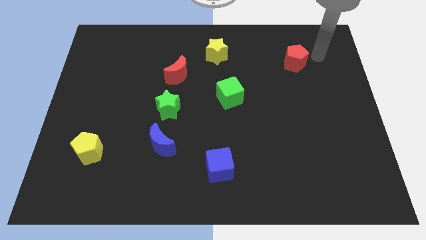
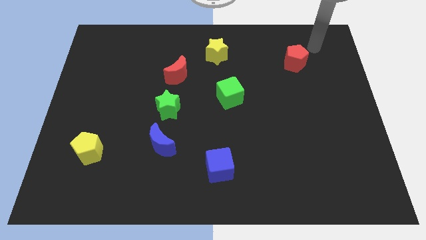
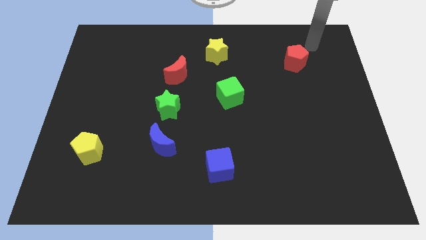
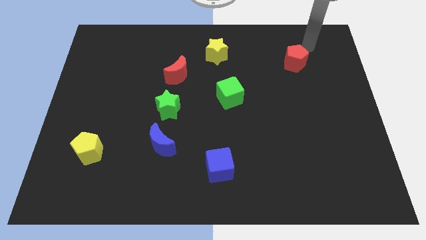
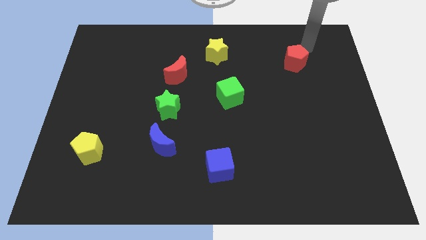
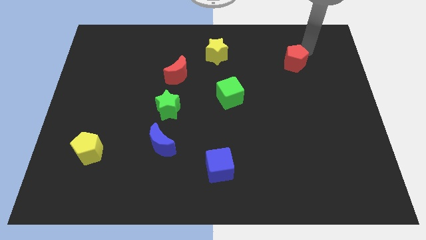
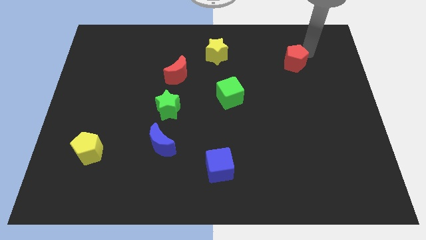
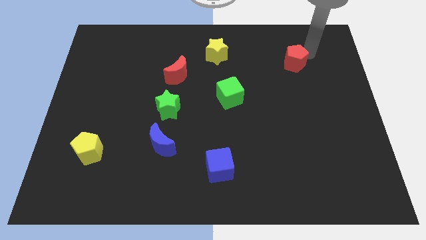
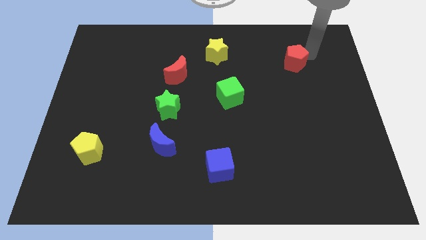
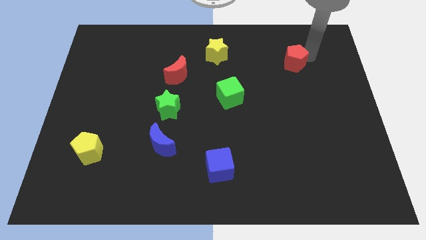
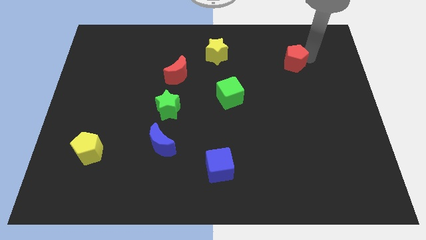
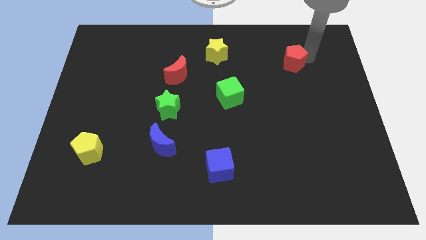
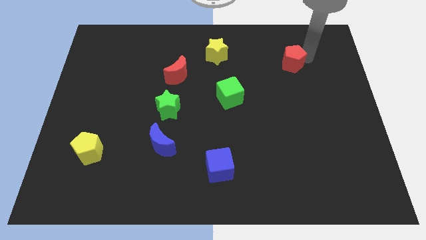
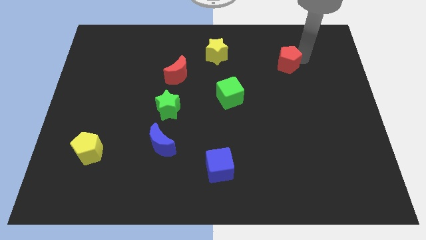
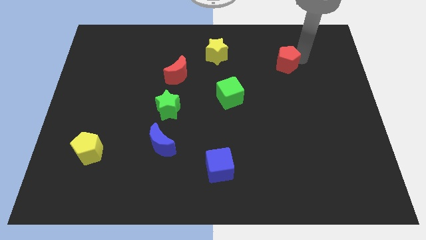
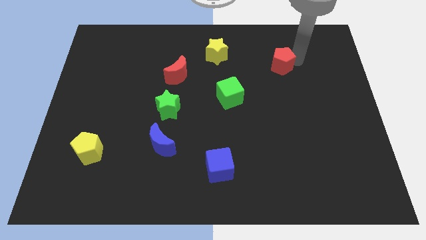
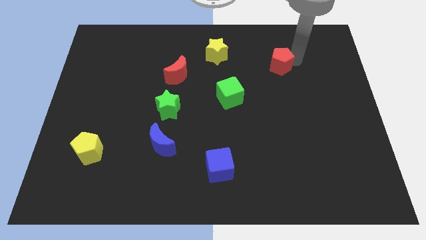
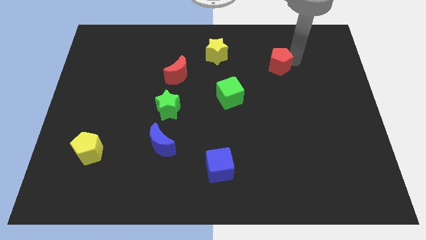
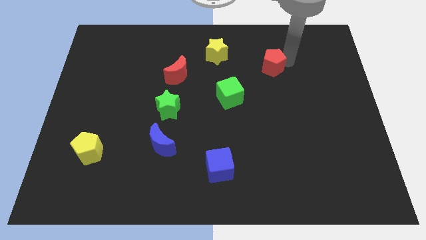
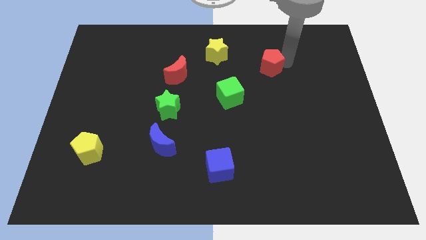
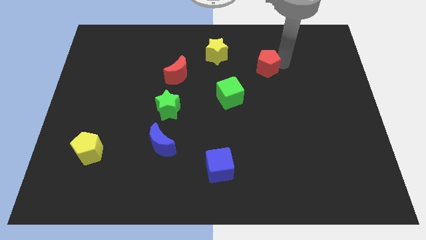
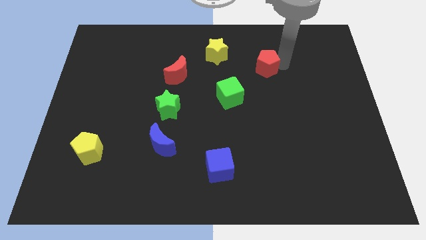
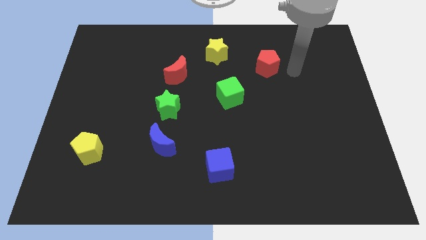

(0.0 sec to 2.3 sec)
slightly push the red pentagon to the top right side of the green cube

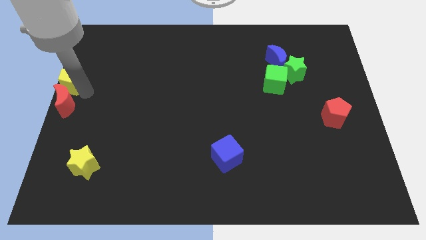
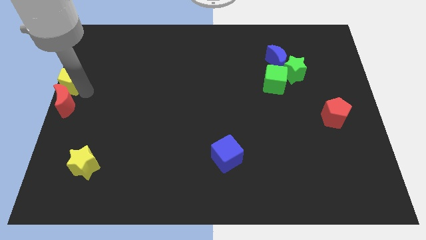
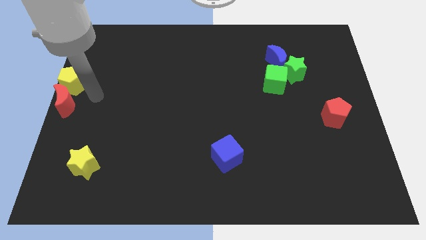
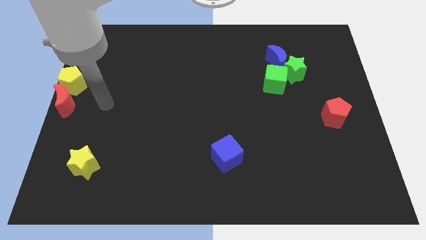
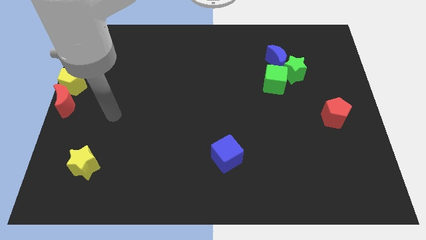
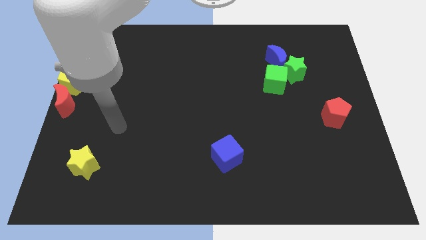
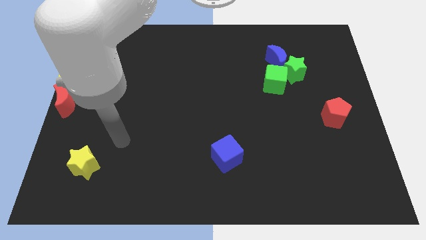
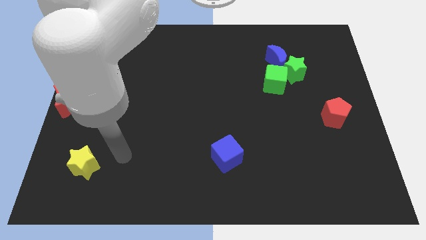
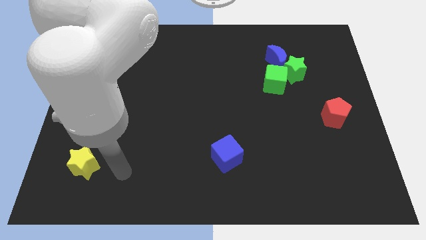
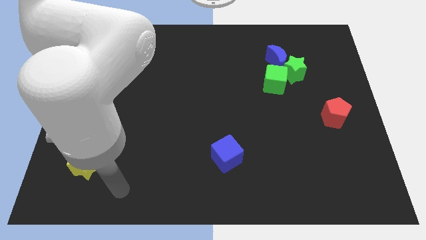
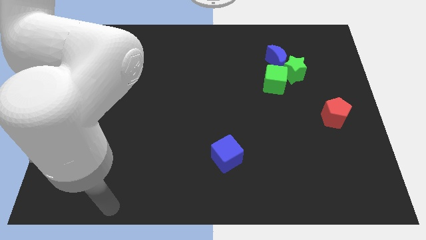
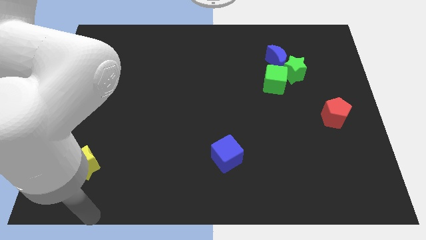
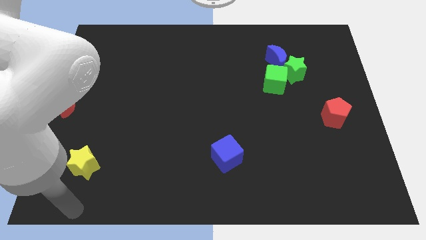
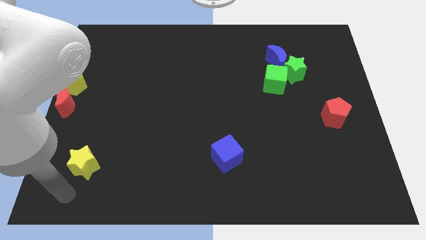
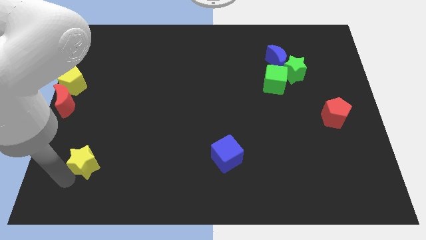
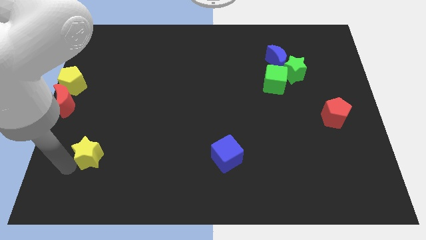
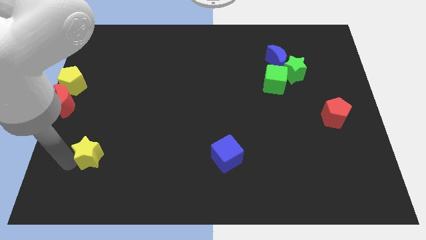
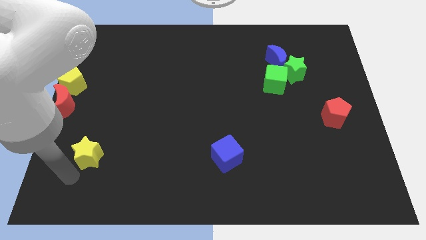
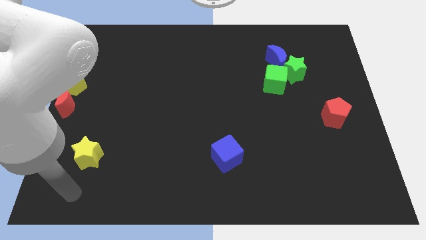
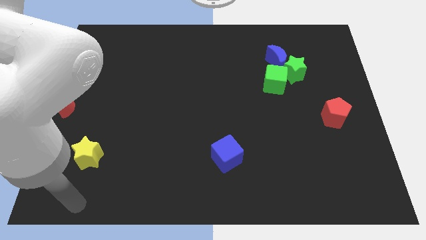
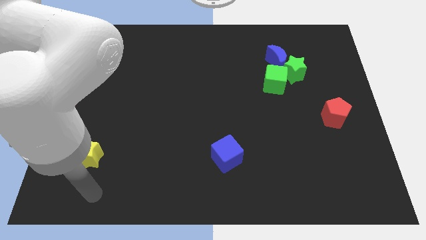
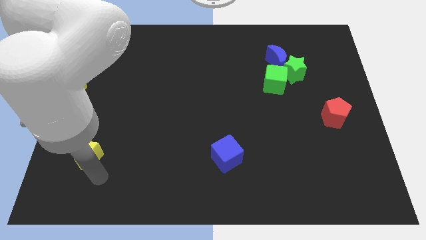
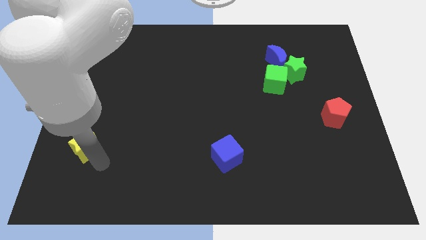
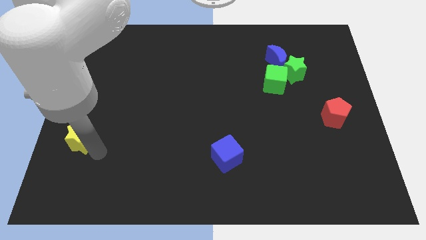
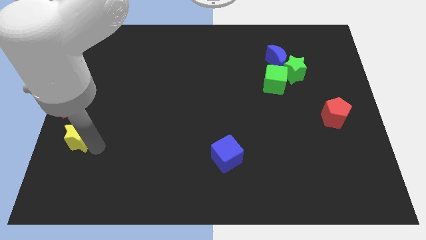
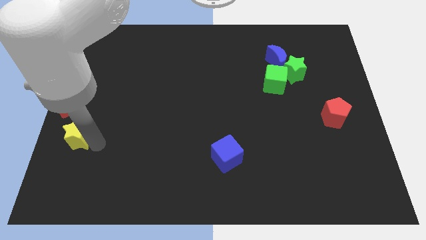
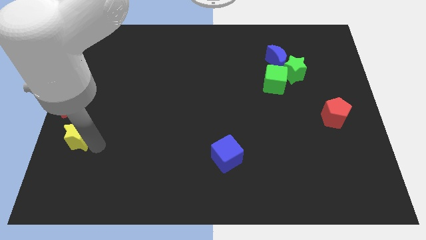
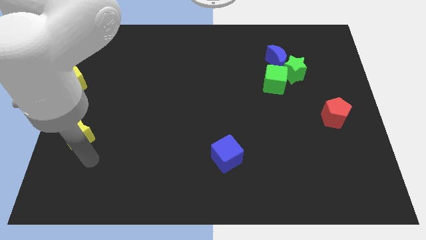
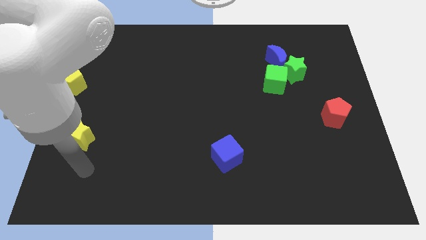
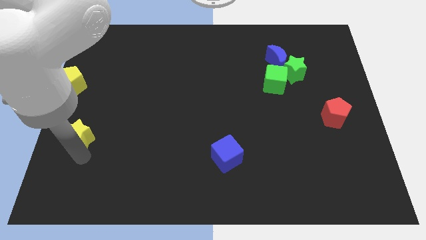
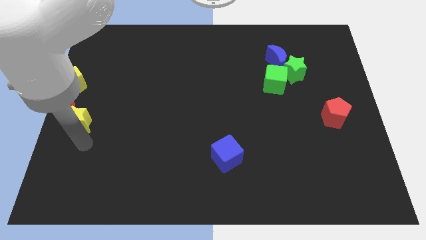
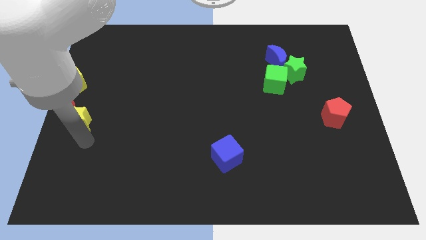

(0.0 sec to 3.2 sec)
push the yellow star towards the red crescent

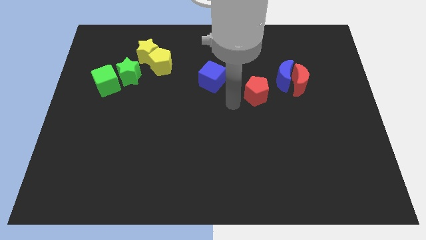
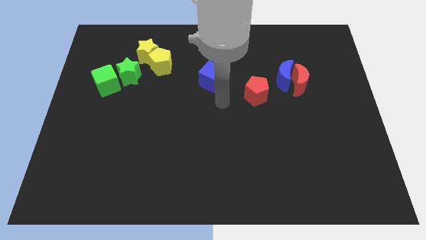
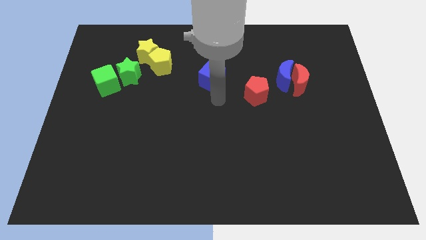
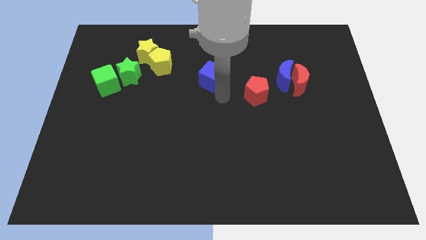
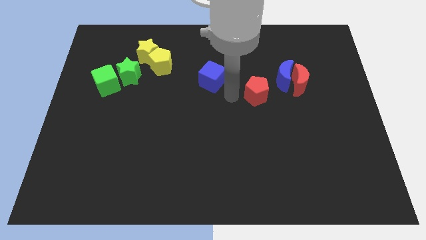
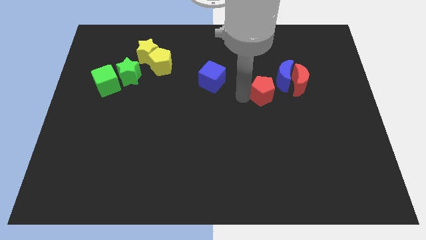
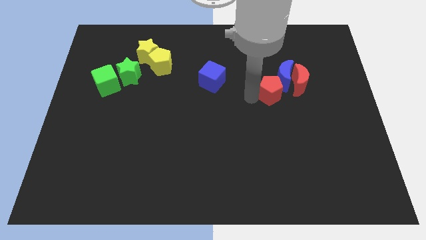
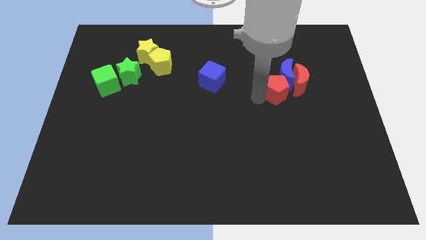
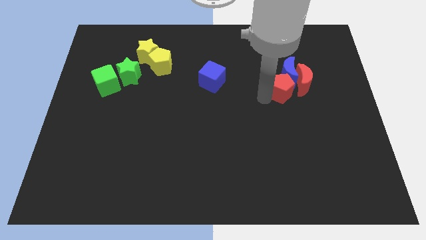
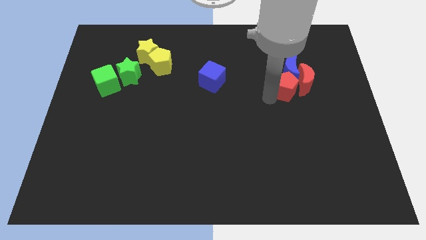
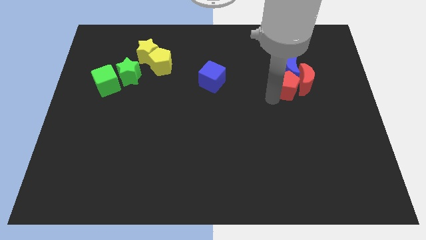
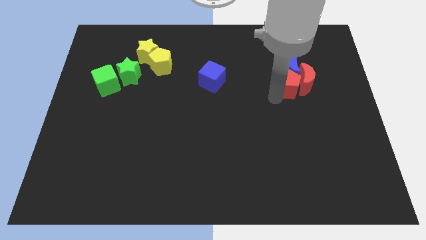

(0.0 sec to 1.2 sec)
push the red pentagon into the blue moon

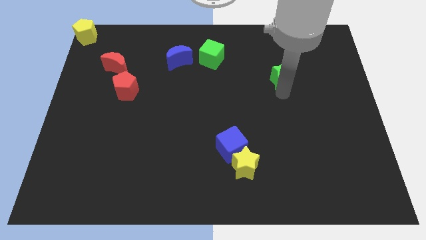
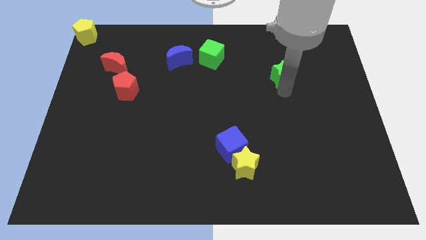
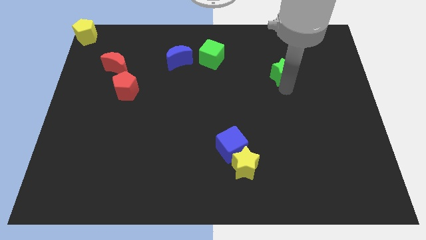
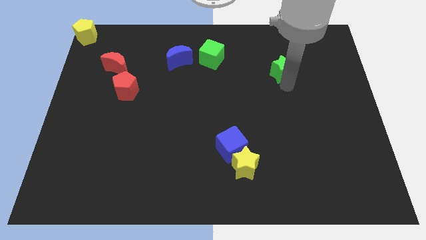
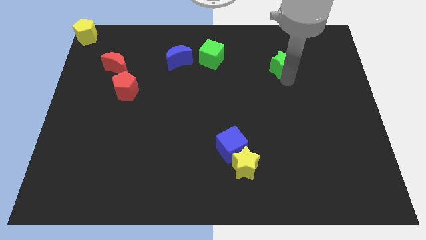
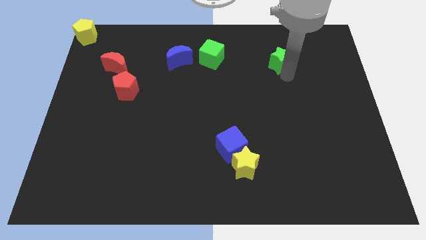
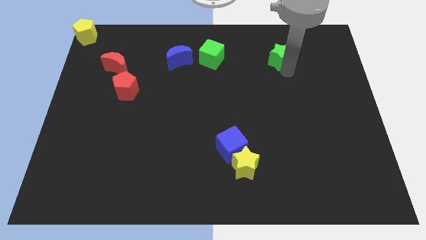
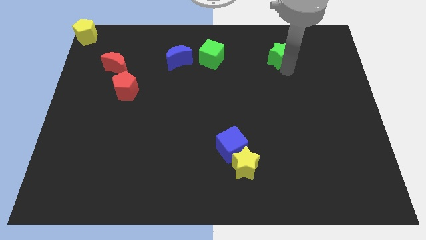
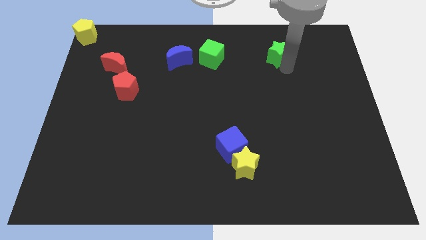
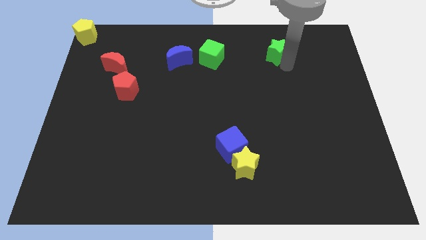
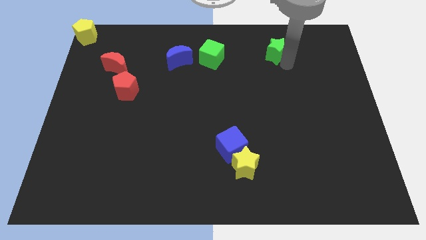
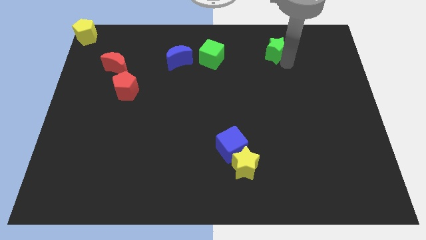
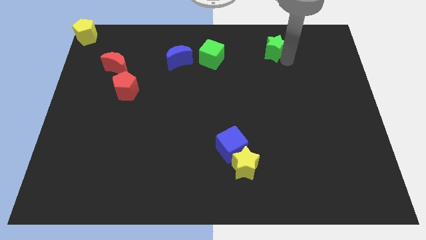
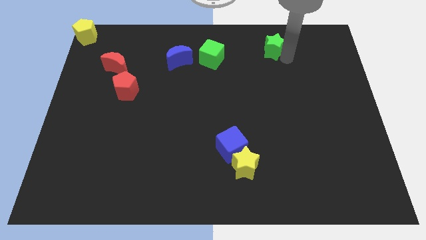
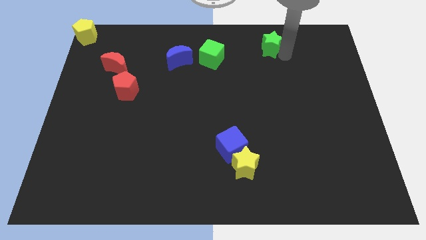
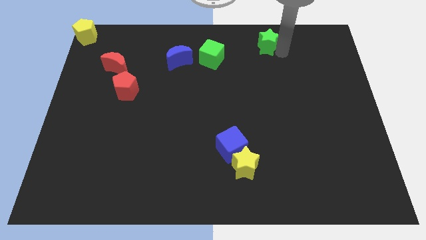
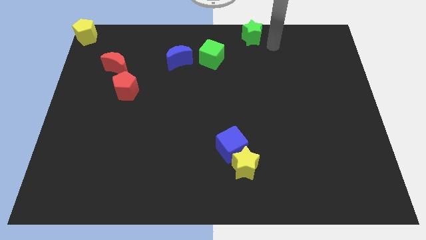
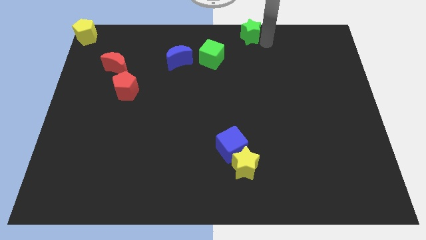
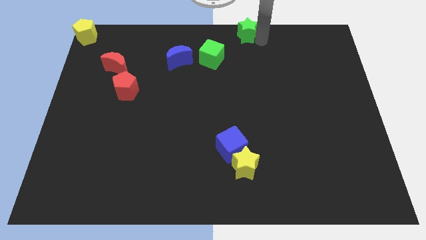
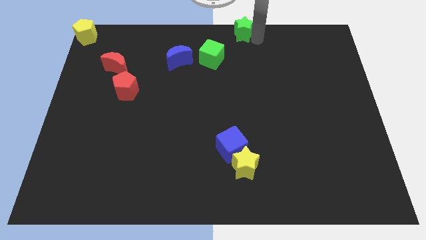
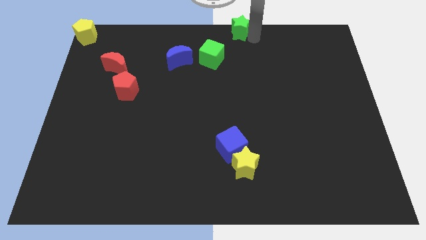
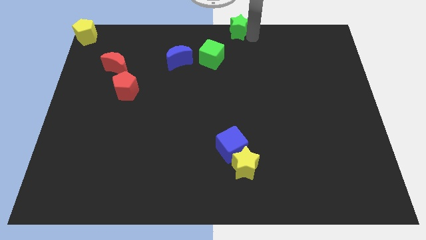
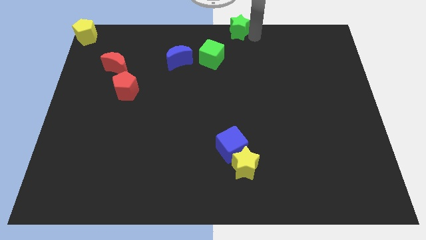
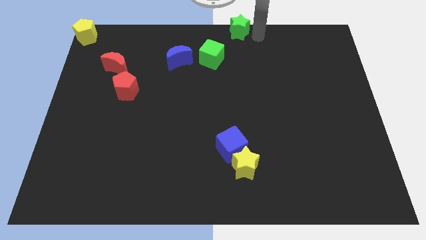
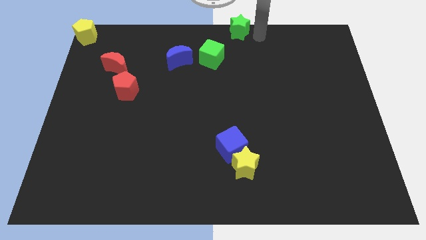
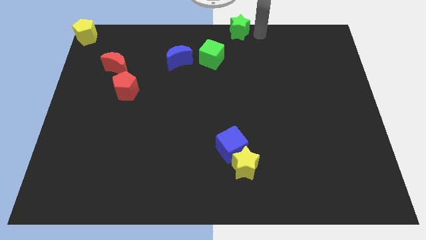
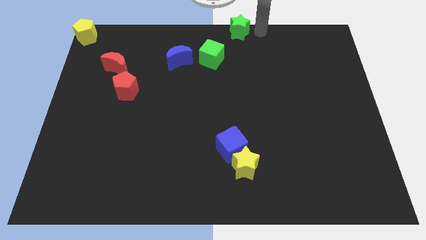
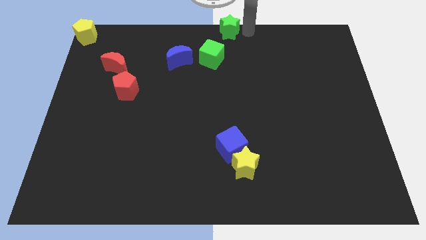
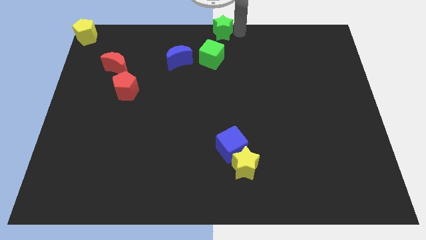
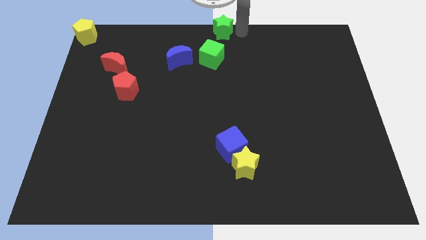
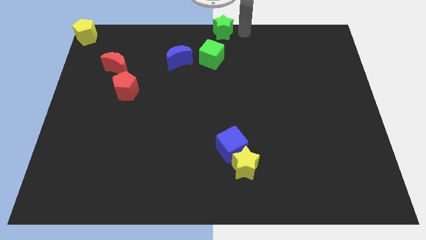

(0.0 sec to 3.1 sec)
slide green star to the top center of the board
